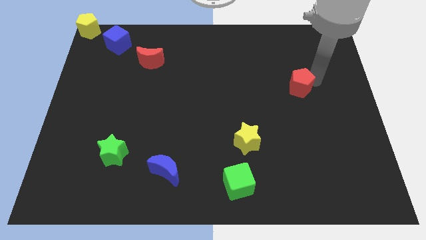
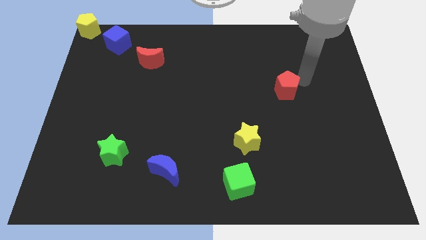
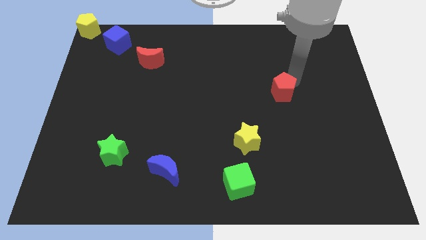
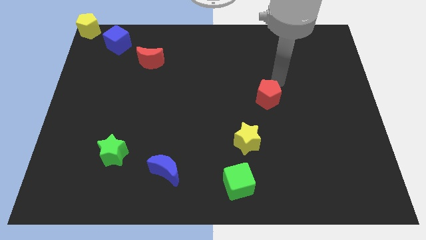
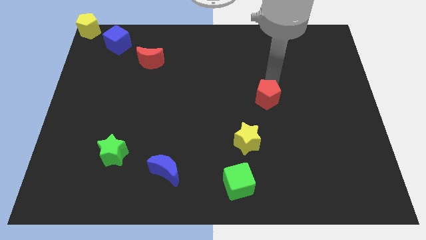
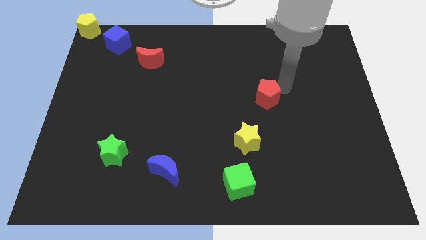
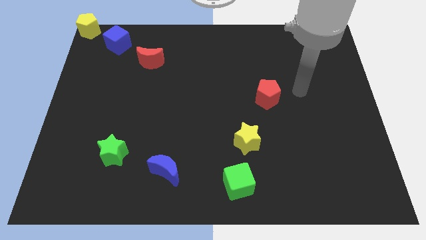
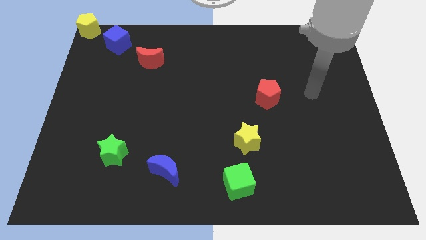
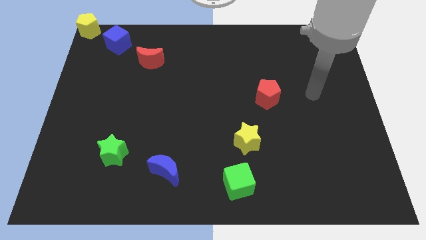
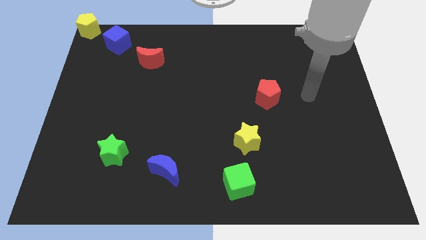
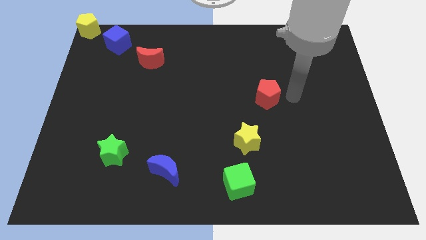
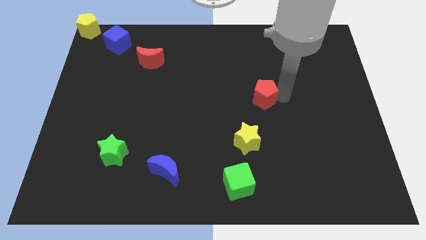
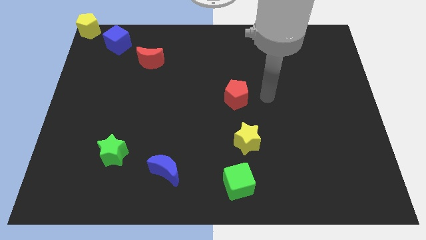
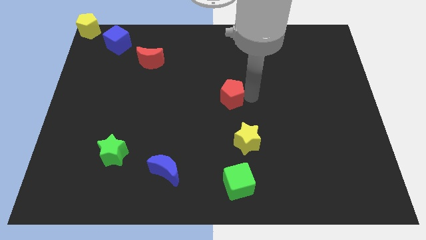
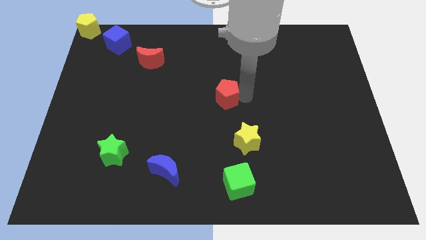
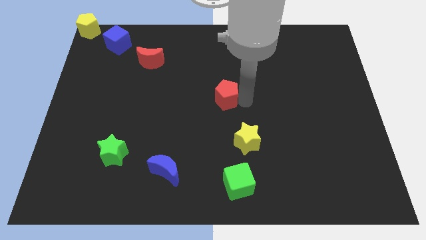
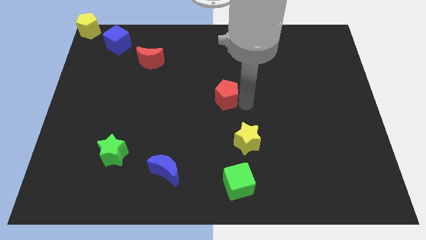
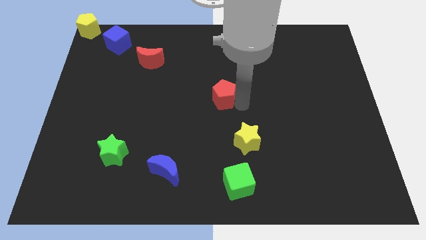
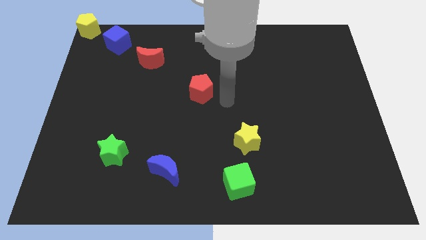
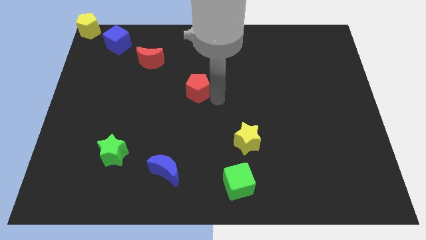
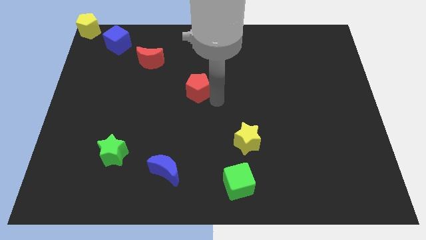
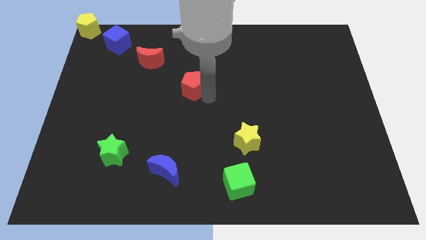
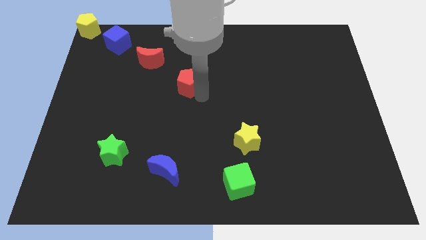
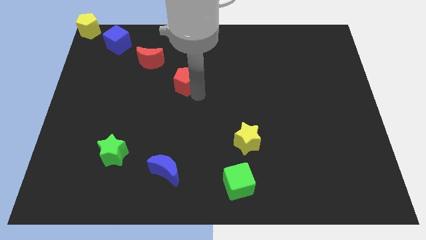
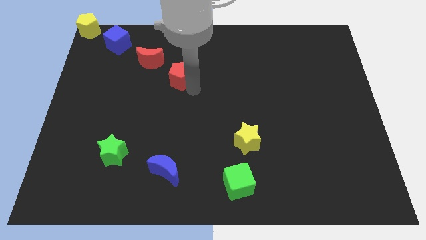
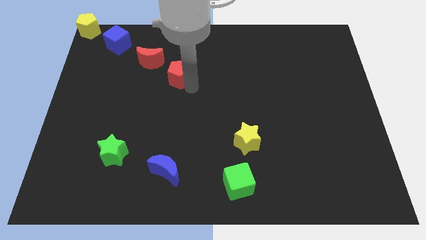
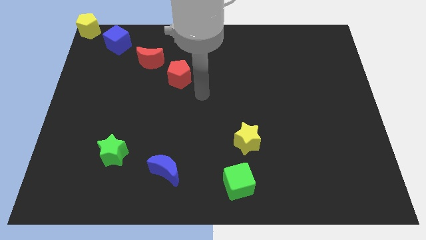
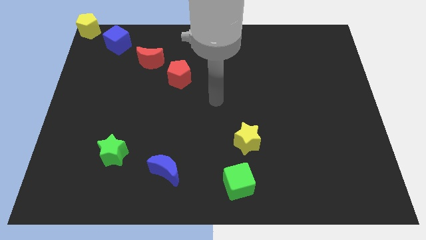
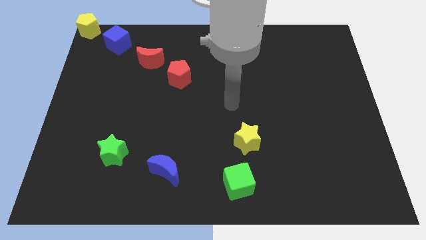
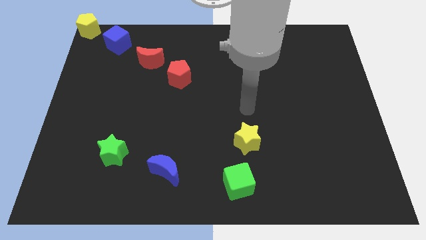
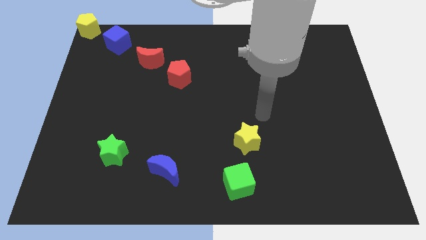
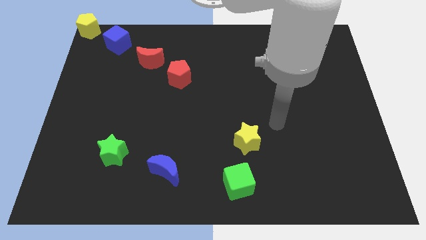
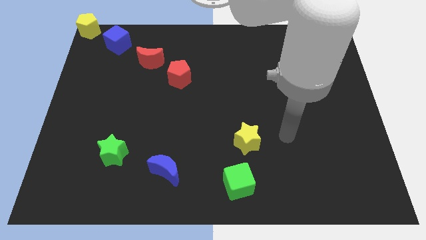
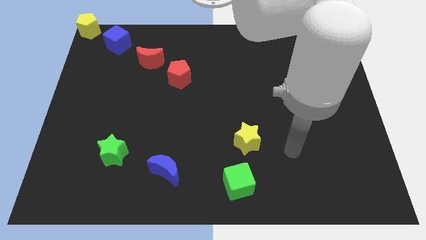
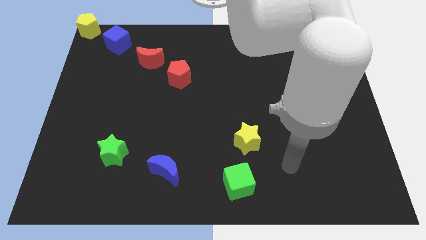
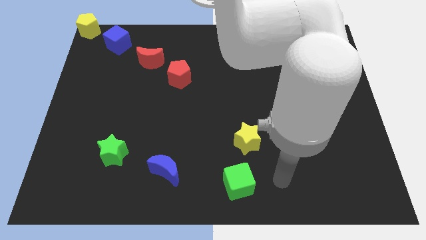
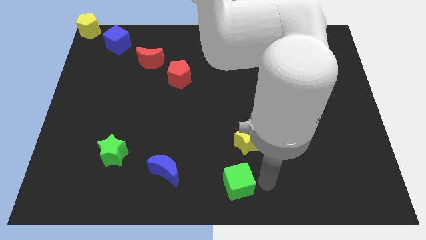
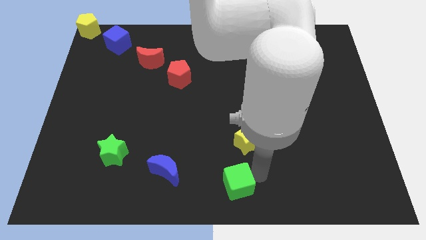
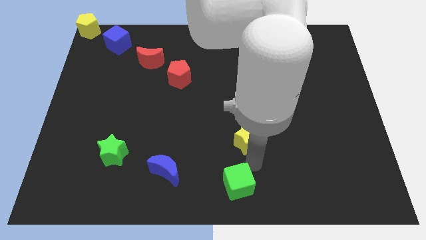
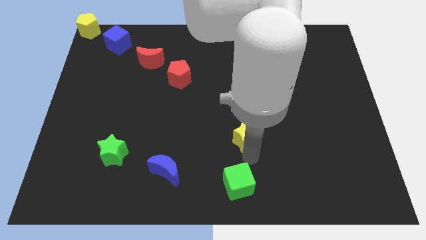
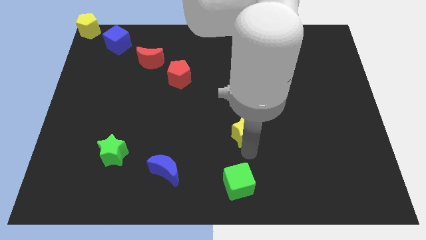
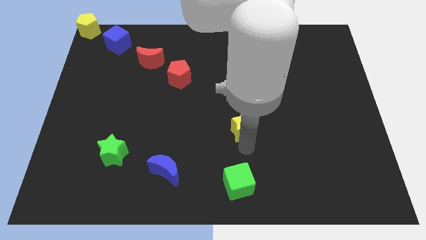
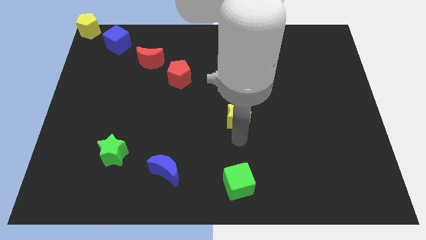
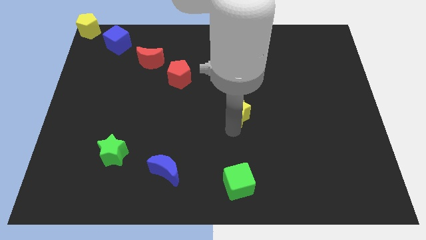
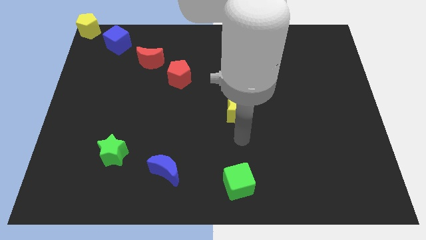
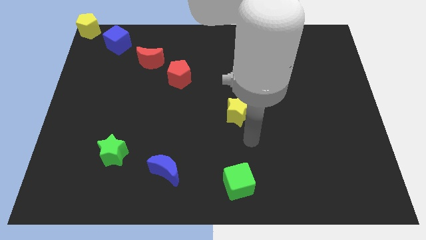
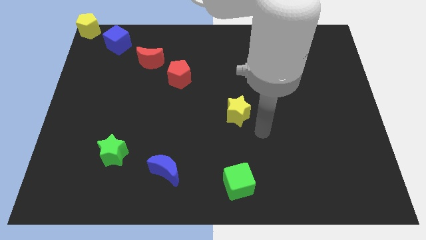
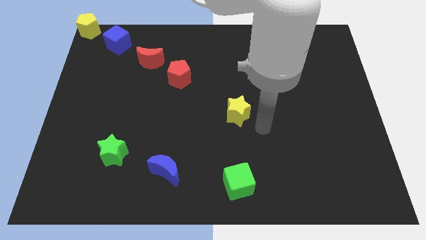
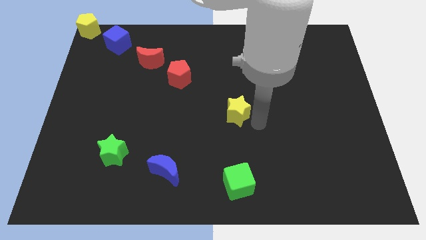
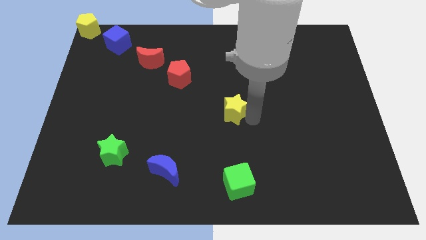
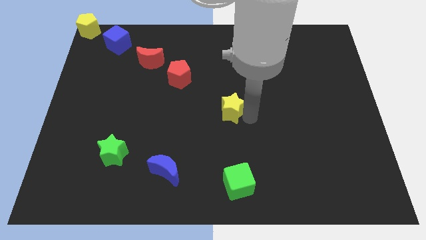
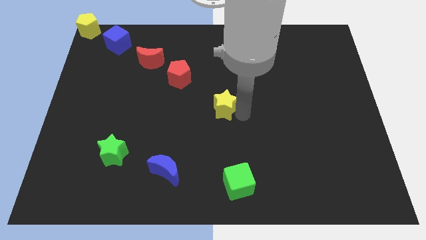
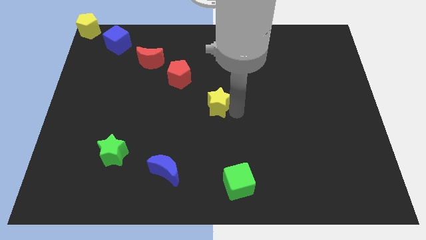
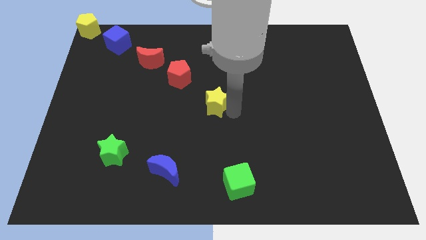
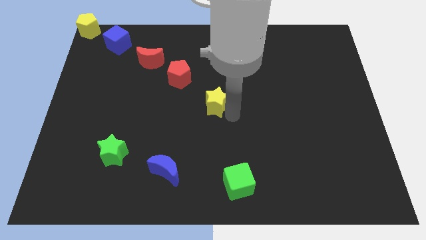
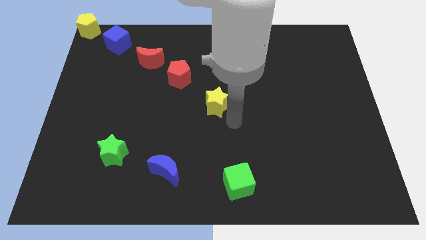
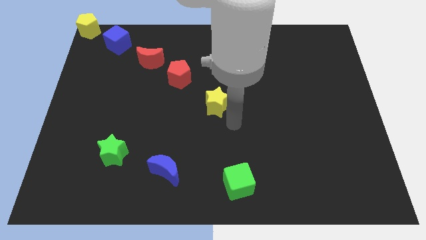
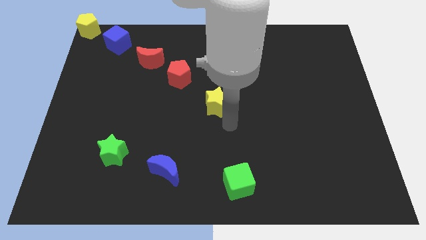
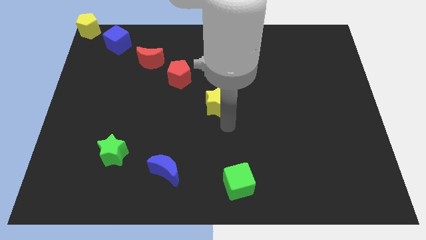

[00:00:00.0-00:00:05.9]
move the yellow star to the right bottom of the red pentagon

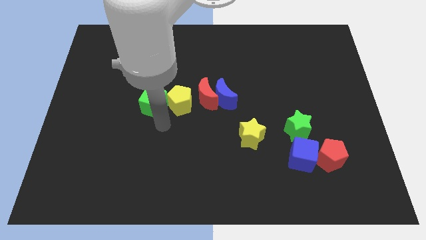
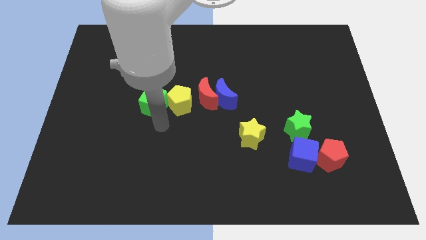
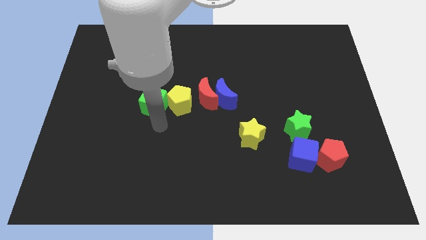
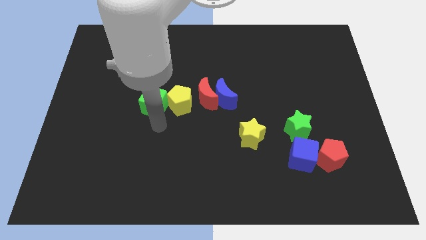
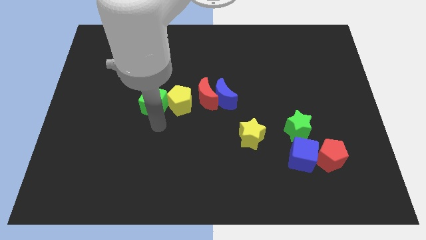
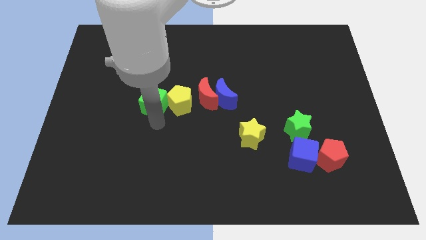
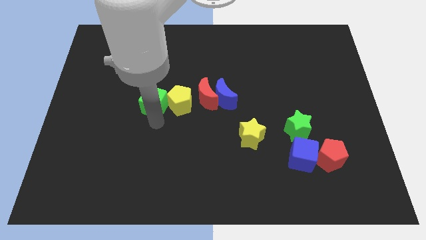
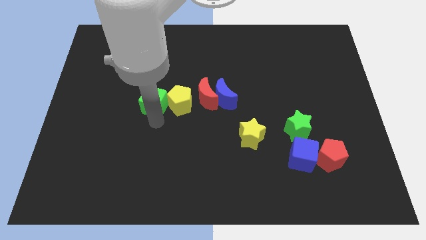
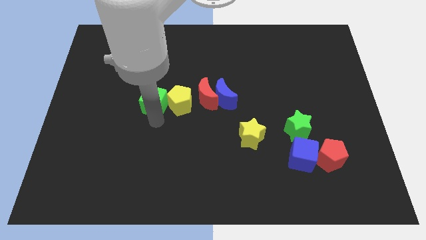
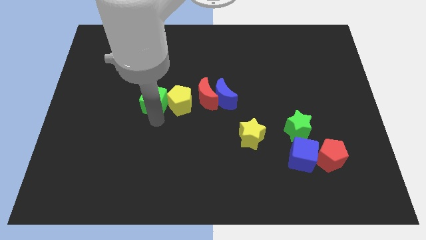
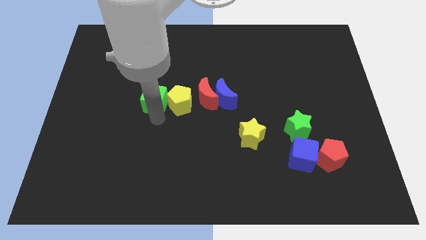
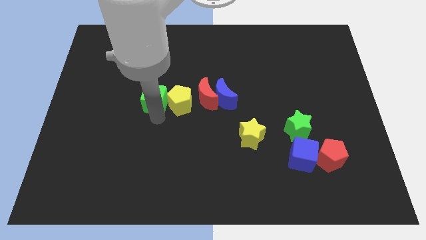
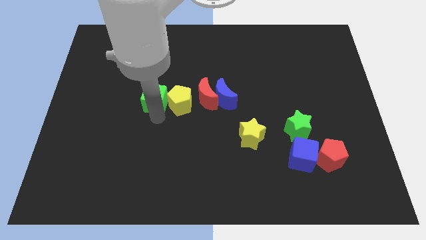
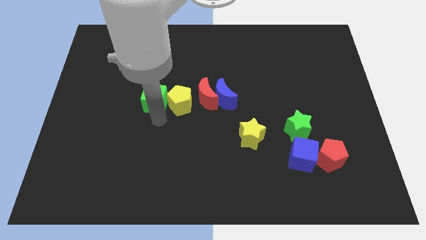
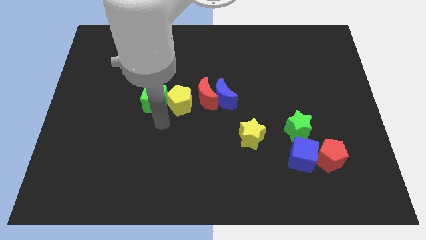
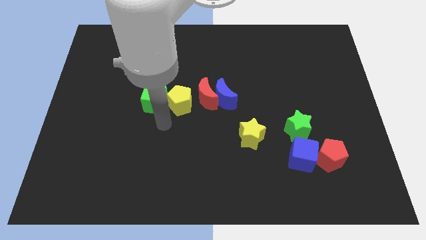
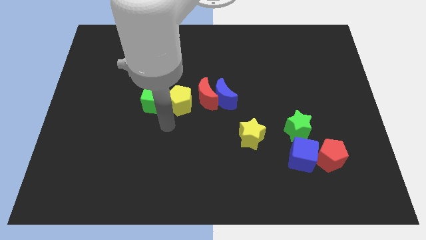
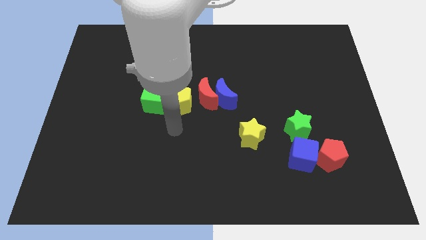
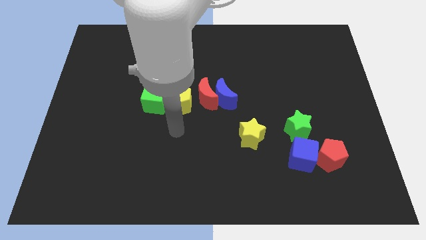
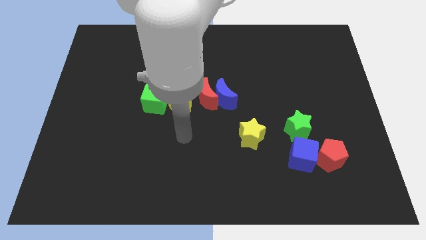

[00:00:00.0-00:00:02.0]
push the green cube up a bit

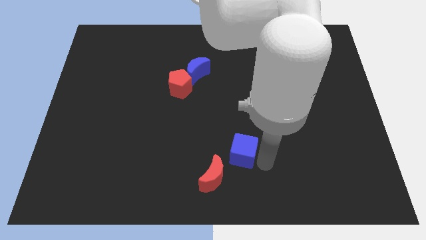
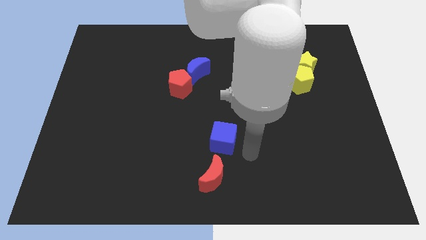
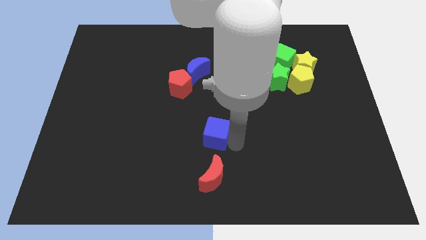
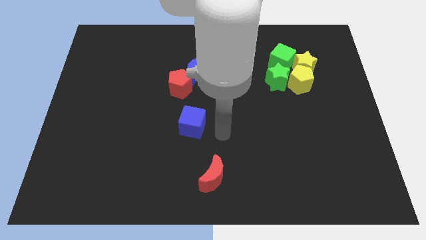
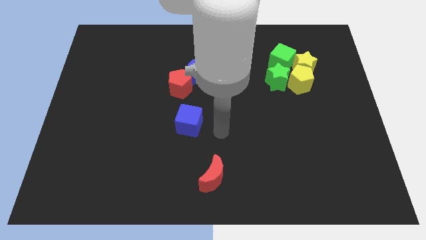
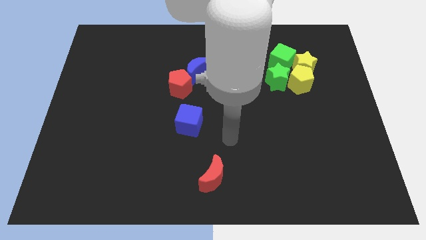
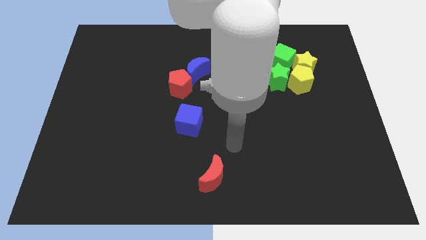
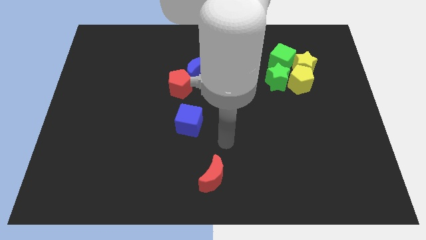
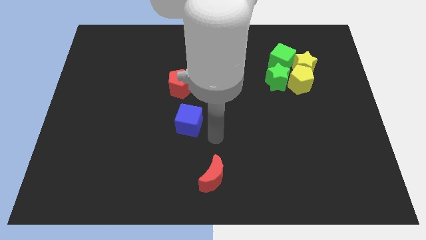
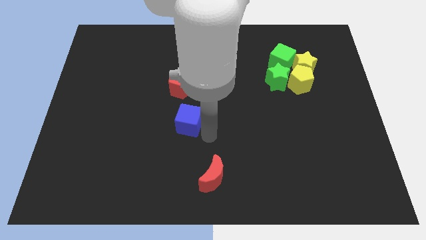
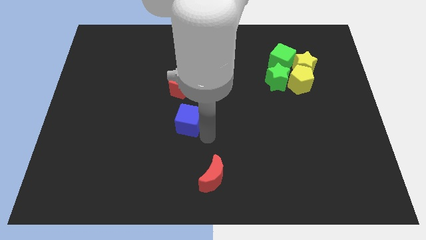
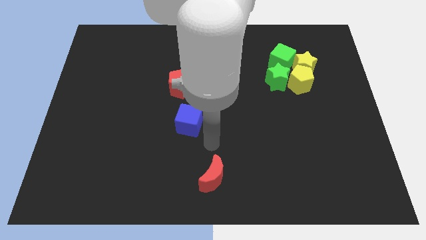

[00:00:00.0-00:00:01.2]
place the blue cube below the red pentagon
